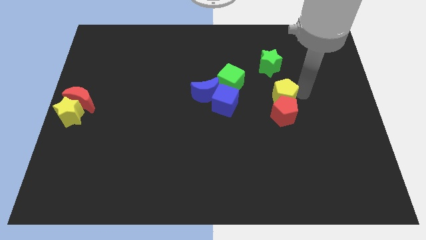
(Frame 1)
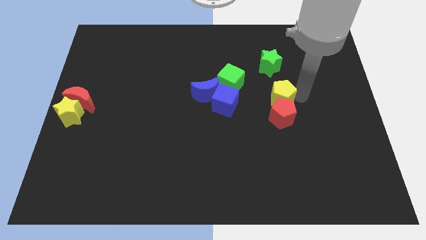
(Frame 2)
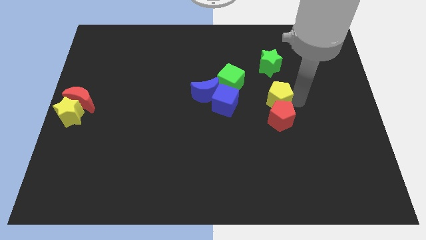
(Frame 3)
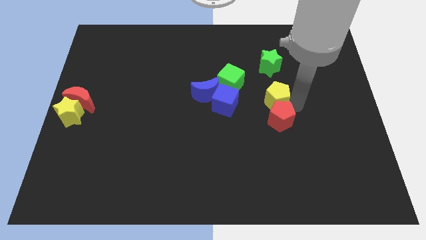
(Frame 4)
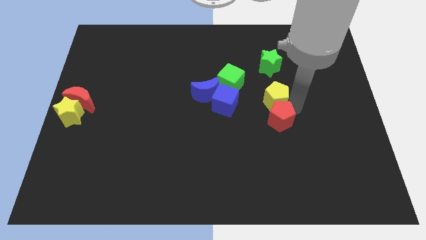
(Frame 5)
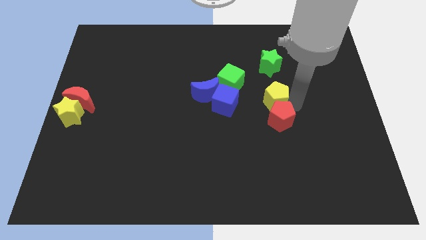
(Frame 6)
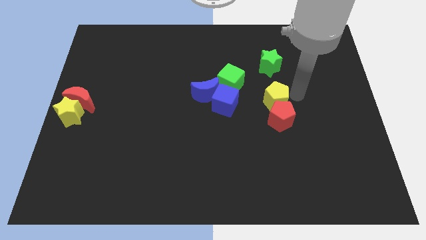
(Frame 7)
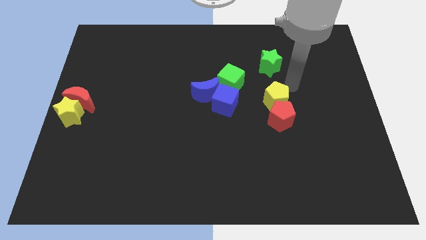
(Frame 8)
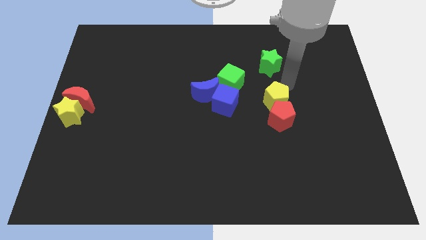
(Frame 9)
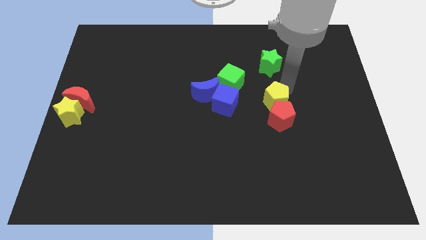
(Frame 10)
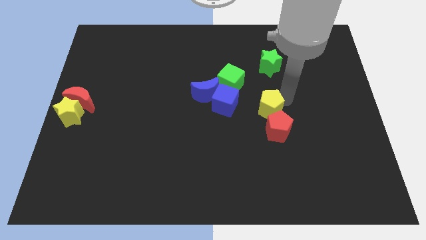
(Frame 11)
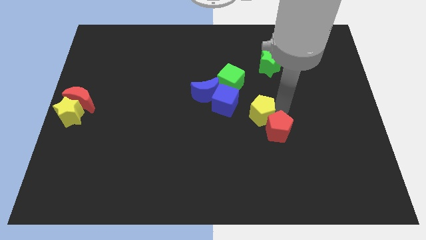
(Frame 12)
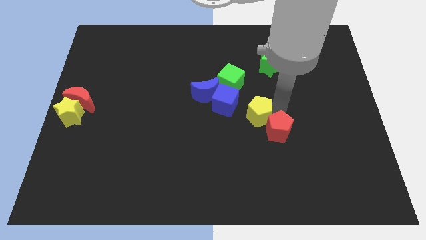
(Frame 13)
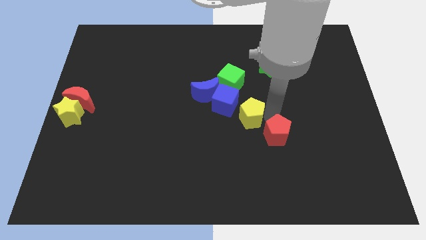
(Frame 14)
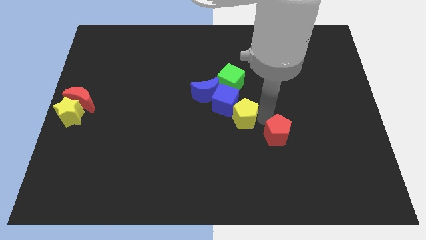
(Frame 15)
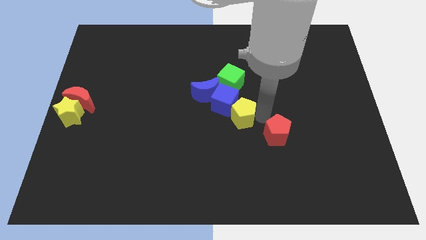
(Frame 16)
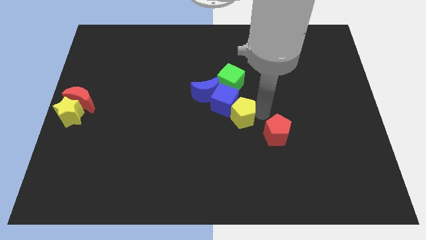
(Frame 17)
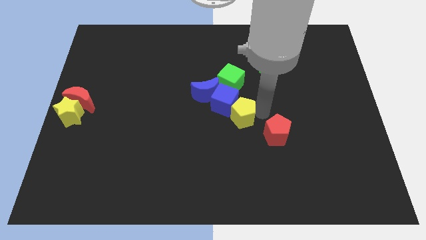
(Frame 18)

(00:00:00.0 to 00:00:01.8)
move the yellow pentagon to the right side of the blue cube

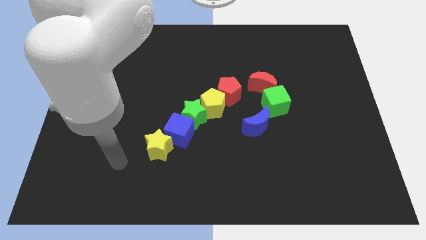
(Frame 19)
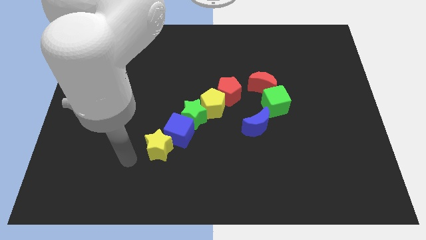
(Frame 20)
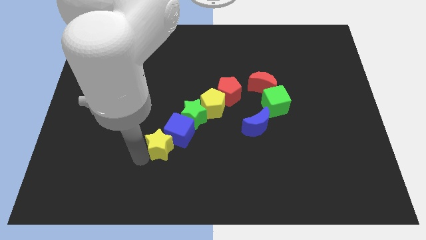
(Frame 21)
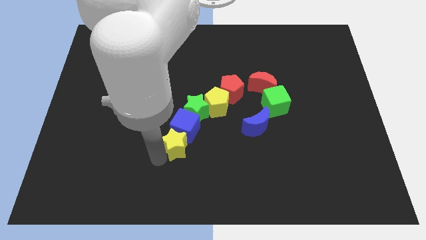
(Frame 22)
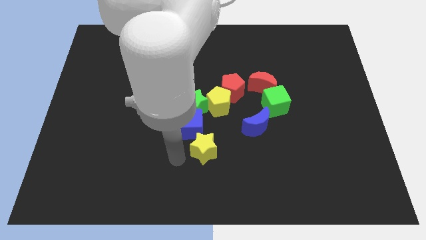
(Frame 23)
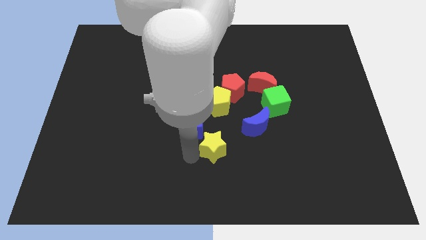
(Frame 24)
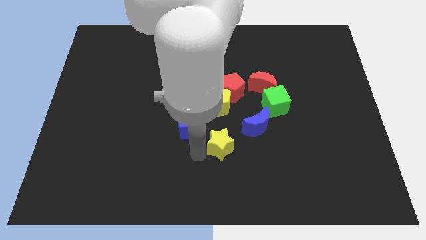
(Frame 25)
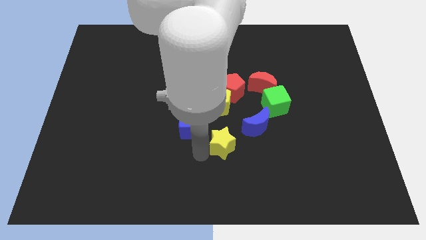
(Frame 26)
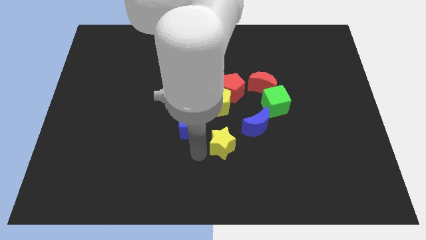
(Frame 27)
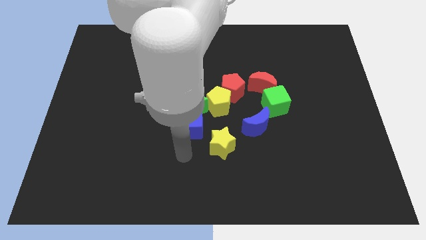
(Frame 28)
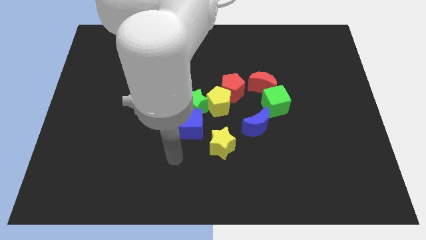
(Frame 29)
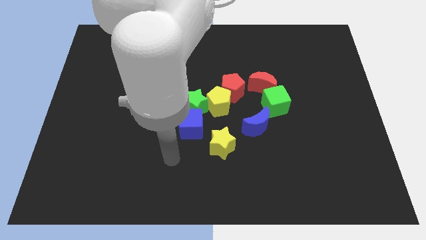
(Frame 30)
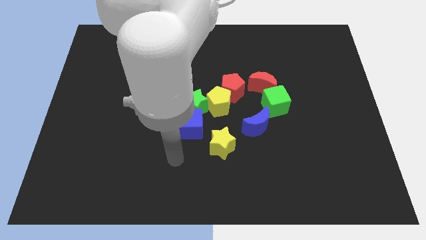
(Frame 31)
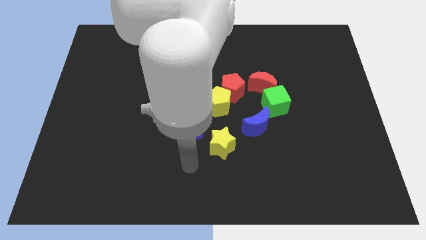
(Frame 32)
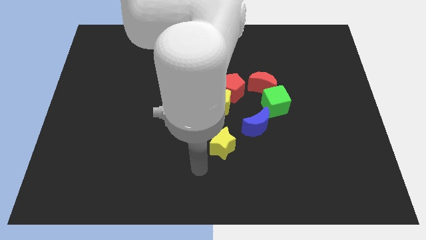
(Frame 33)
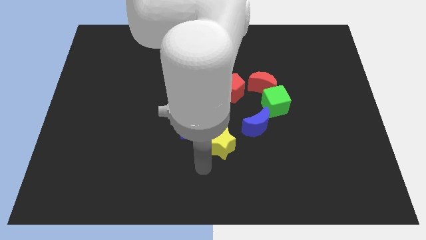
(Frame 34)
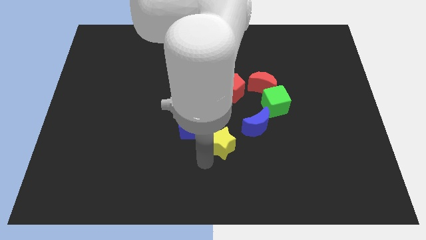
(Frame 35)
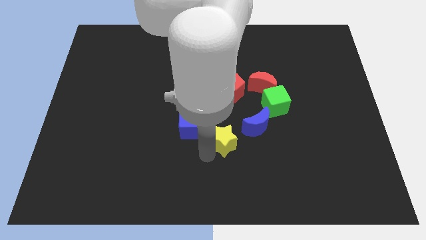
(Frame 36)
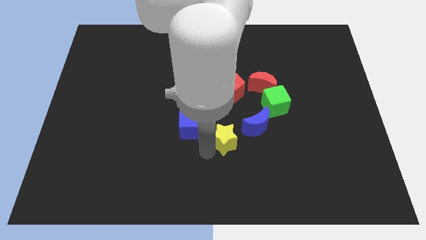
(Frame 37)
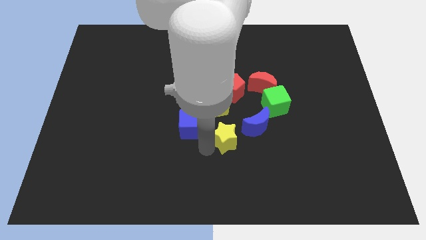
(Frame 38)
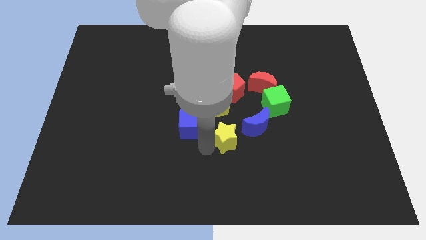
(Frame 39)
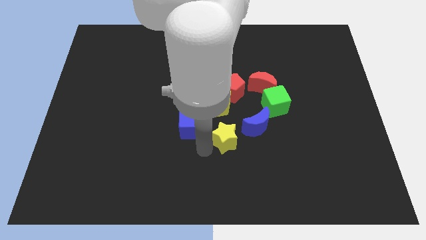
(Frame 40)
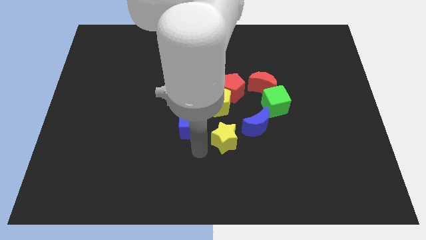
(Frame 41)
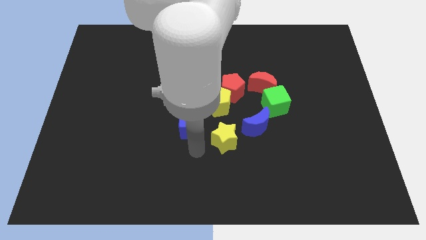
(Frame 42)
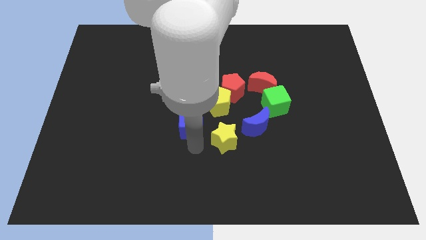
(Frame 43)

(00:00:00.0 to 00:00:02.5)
move yellow star towards blue moon

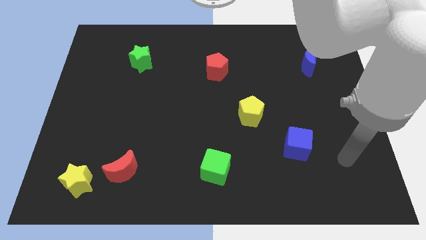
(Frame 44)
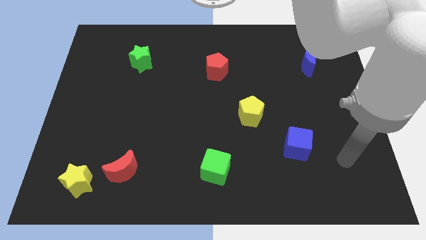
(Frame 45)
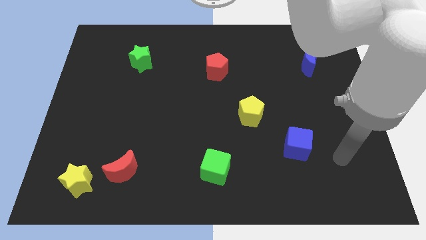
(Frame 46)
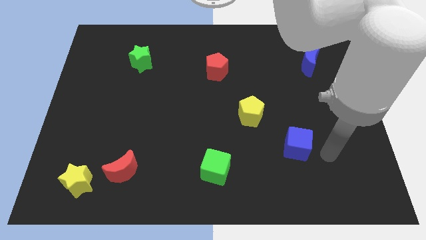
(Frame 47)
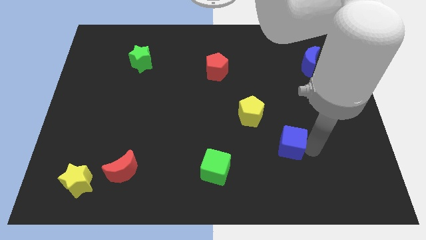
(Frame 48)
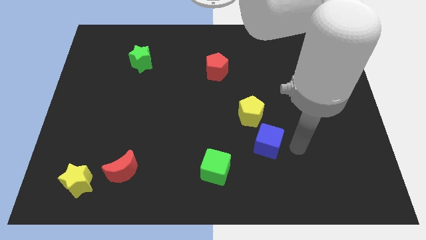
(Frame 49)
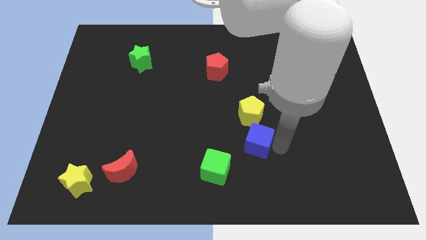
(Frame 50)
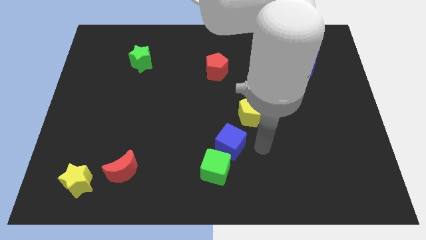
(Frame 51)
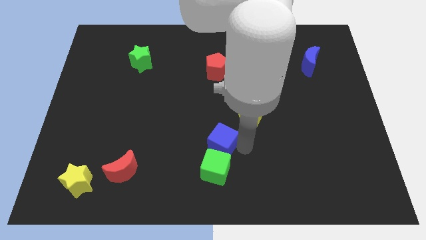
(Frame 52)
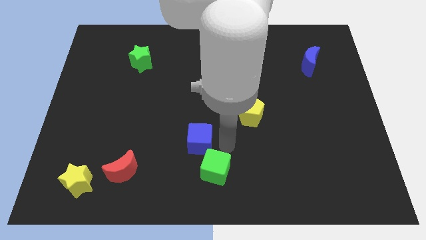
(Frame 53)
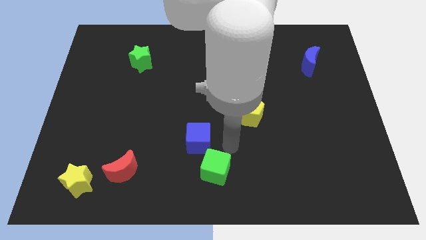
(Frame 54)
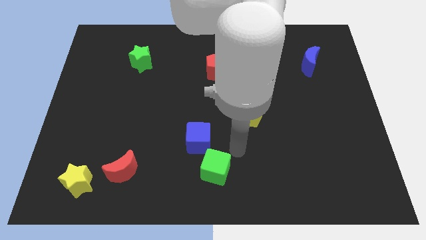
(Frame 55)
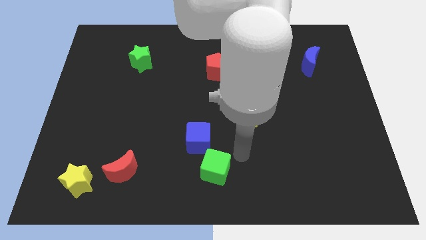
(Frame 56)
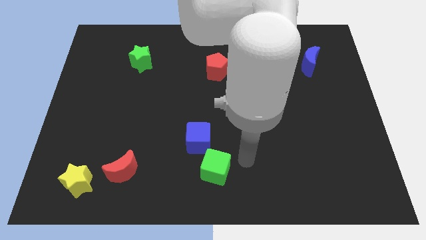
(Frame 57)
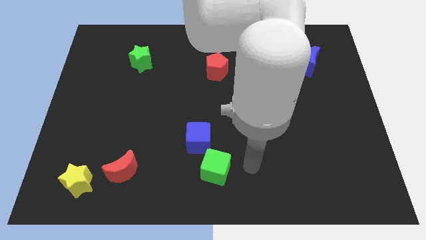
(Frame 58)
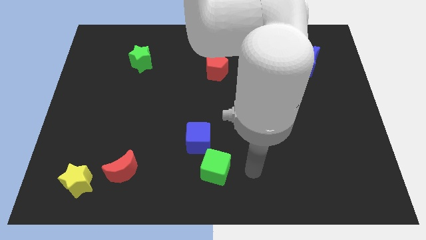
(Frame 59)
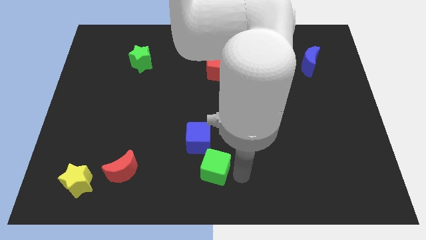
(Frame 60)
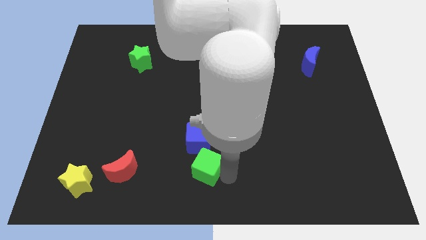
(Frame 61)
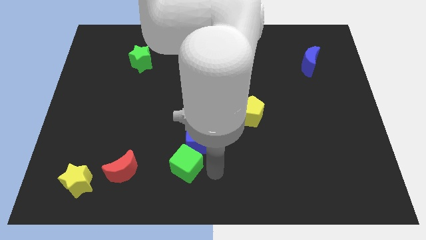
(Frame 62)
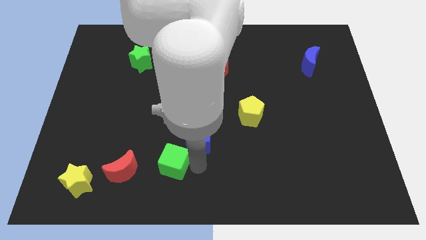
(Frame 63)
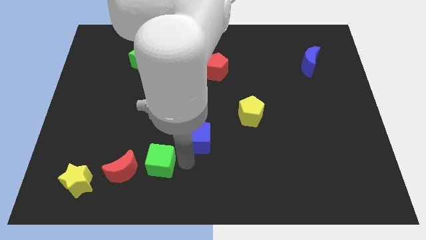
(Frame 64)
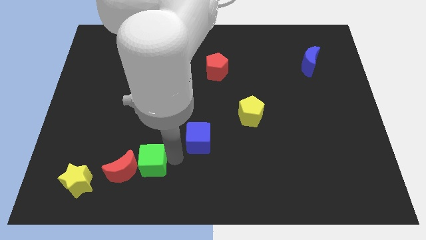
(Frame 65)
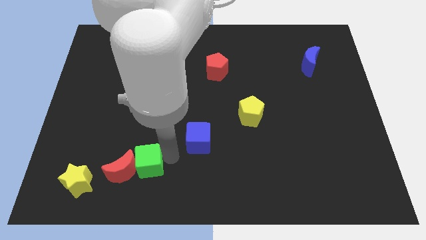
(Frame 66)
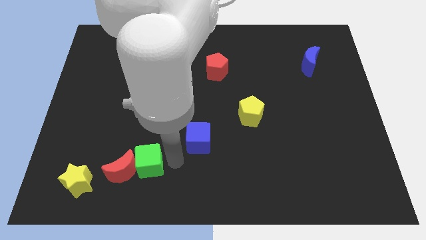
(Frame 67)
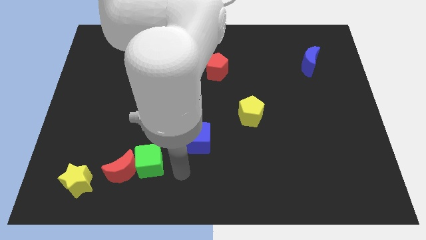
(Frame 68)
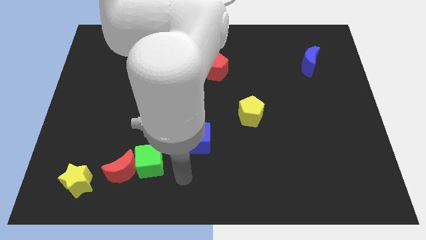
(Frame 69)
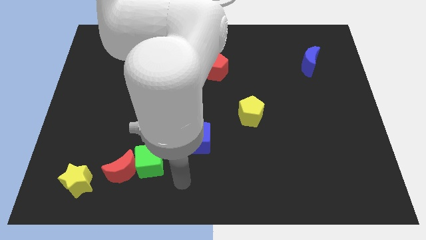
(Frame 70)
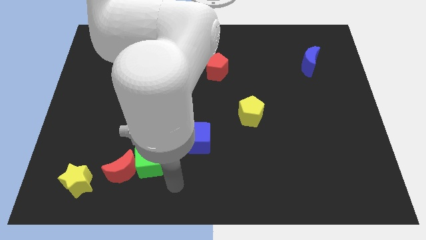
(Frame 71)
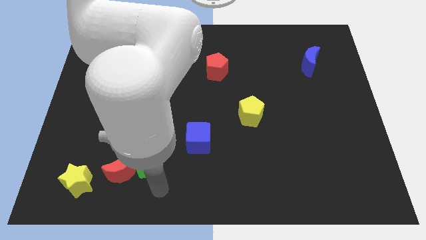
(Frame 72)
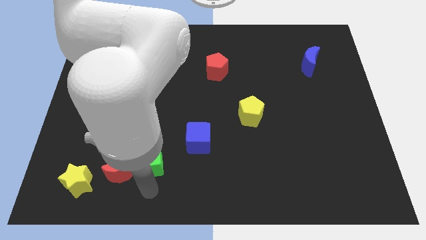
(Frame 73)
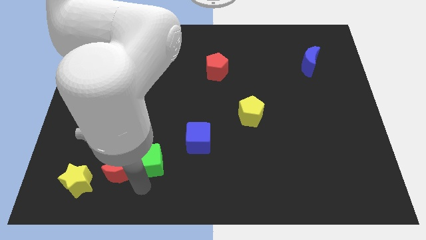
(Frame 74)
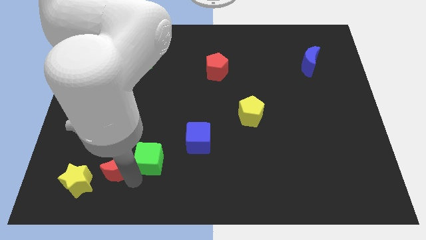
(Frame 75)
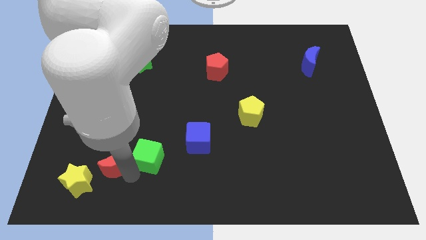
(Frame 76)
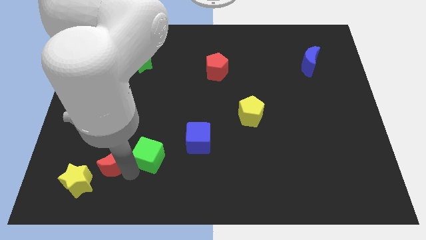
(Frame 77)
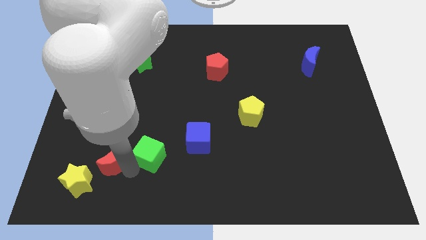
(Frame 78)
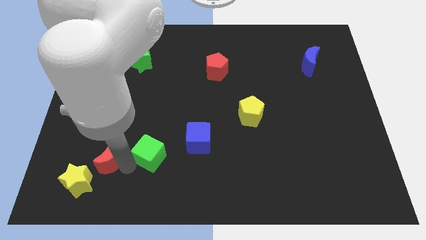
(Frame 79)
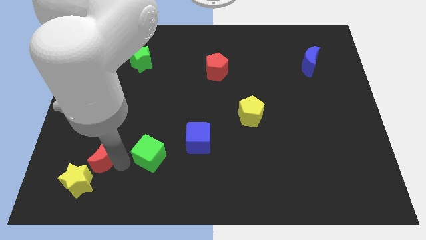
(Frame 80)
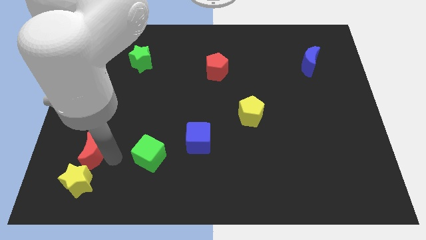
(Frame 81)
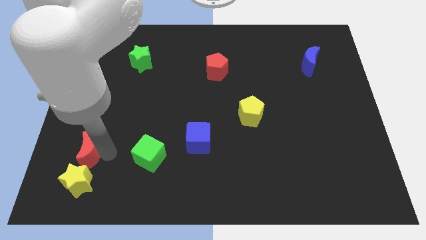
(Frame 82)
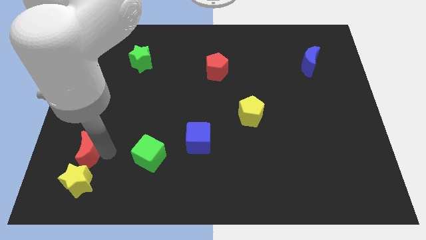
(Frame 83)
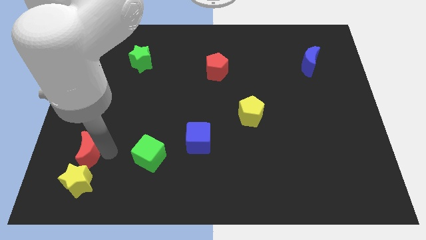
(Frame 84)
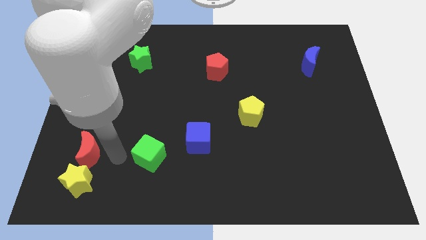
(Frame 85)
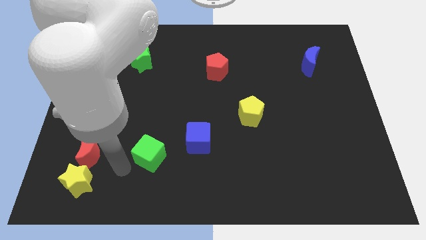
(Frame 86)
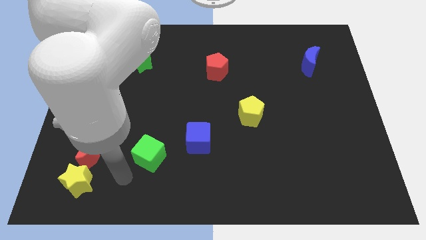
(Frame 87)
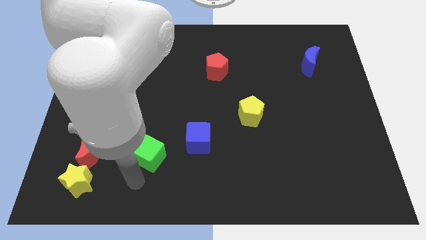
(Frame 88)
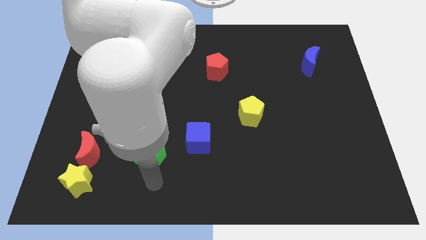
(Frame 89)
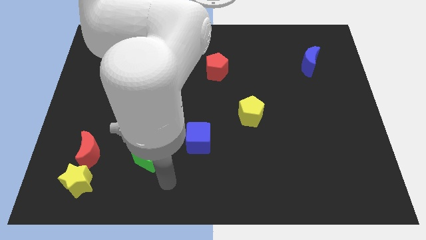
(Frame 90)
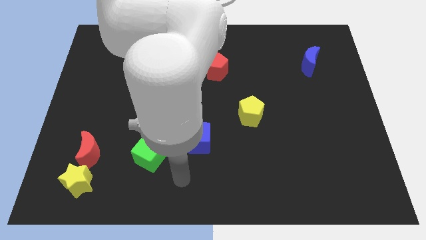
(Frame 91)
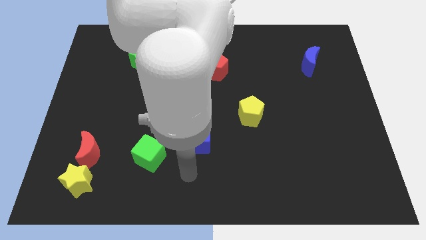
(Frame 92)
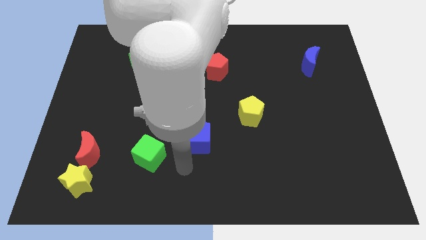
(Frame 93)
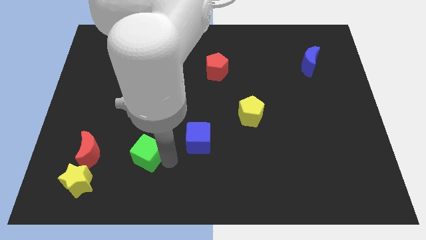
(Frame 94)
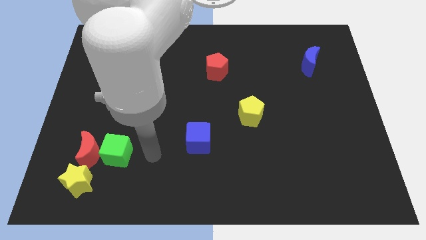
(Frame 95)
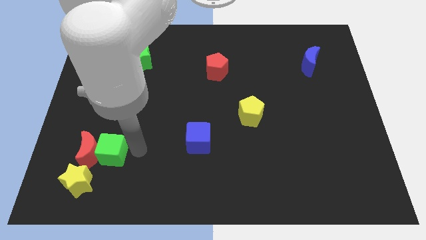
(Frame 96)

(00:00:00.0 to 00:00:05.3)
place the green cube right to the red crescent towards bottom left of the board
